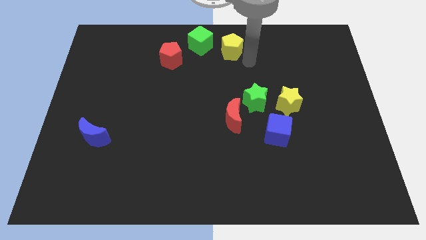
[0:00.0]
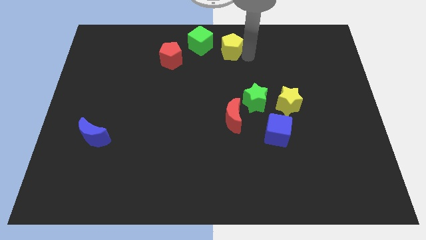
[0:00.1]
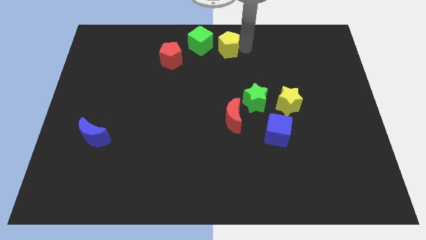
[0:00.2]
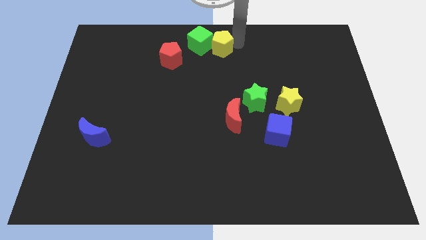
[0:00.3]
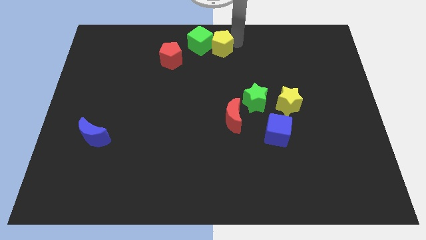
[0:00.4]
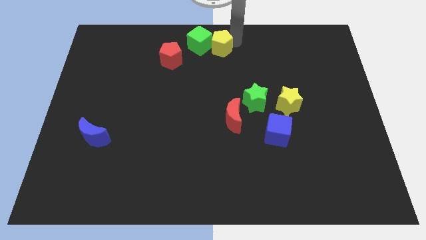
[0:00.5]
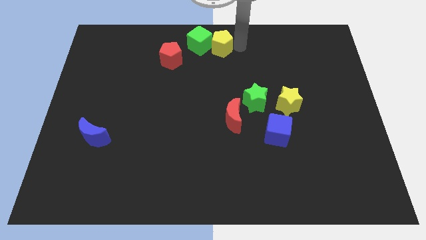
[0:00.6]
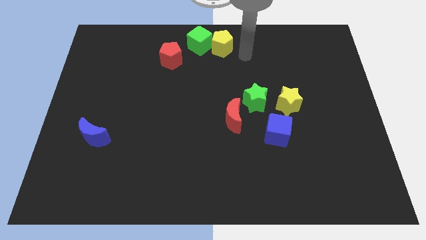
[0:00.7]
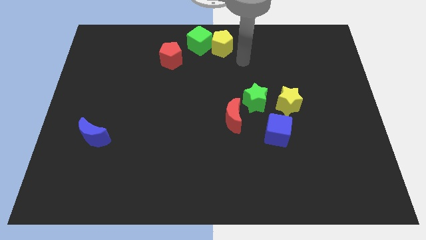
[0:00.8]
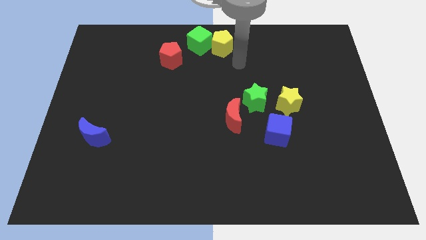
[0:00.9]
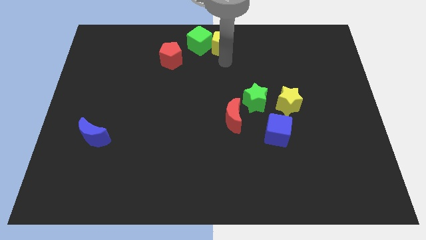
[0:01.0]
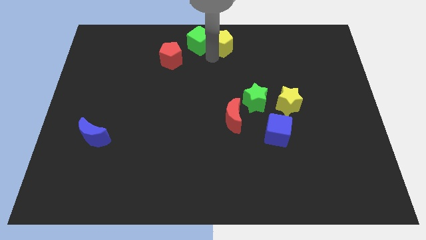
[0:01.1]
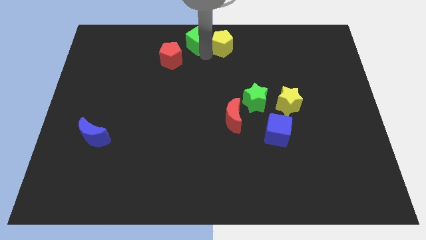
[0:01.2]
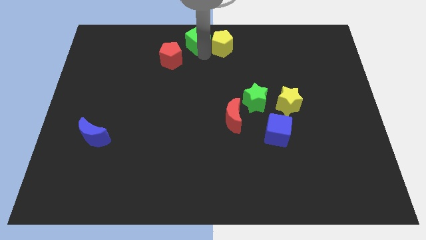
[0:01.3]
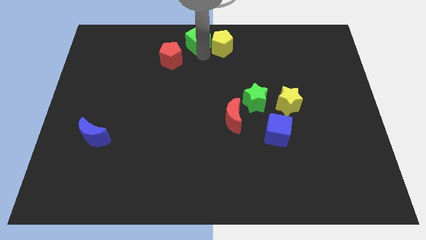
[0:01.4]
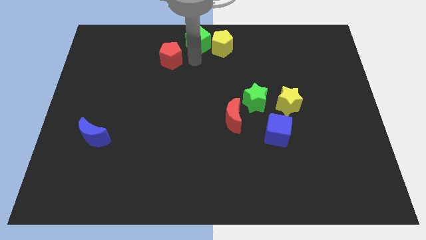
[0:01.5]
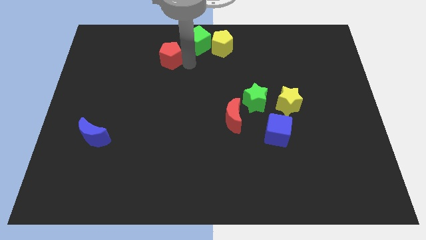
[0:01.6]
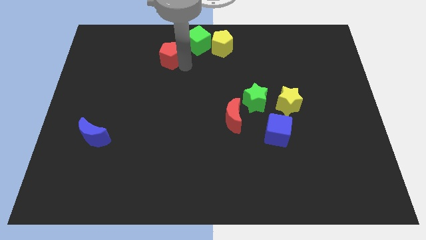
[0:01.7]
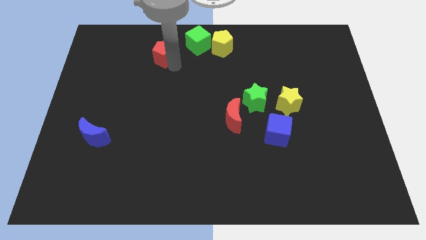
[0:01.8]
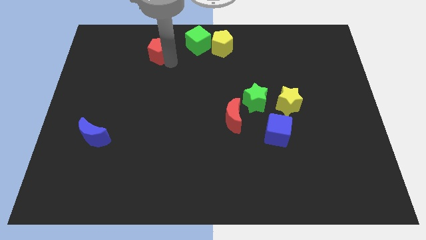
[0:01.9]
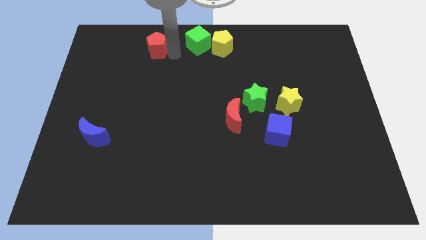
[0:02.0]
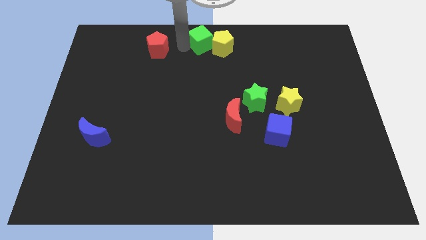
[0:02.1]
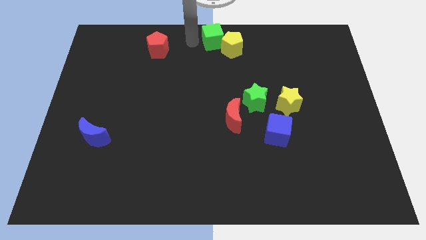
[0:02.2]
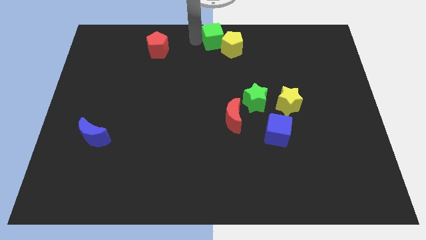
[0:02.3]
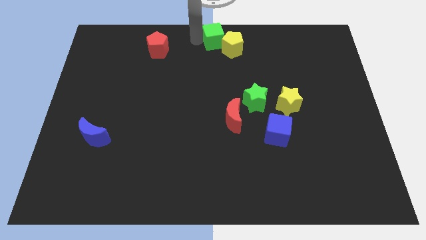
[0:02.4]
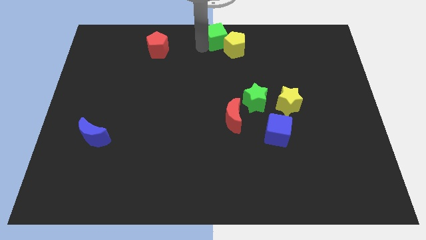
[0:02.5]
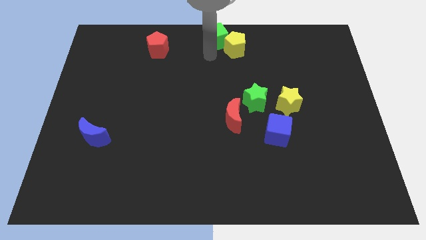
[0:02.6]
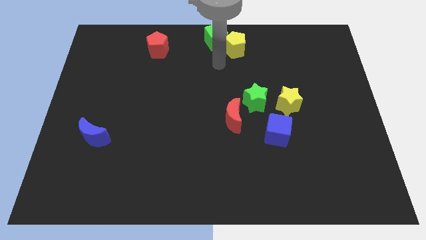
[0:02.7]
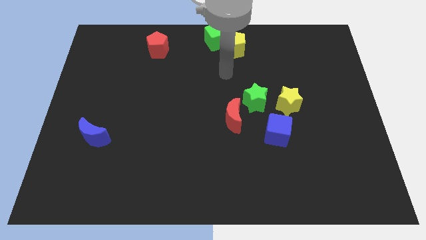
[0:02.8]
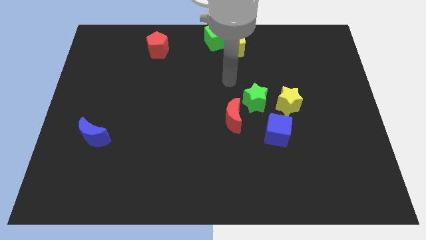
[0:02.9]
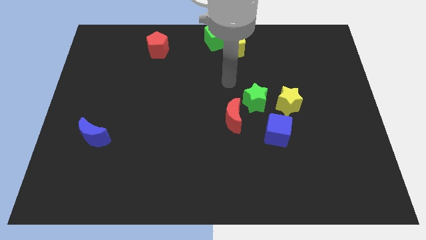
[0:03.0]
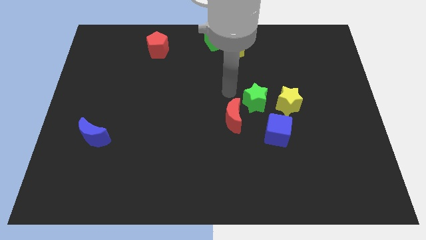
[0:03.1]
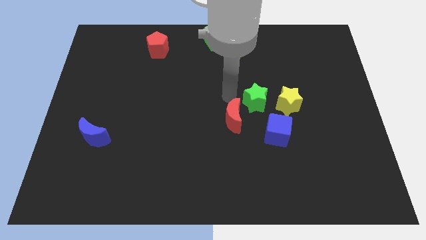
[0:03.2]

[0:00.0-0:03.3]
adjust the yellow pentagon green cube slightly upwards along with the yellow star and green star

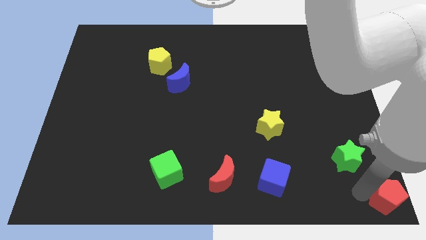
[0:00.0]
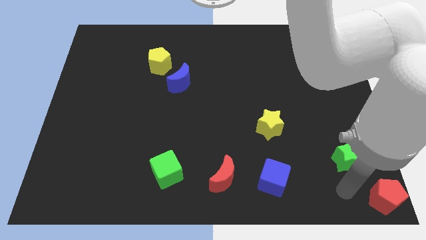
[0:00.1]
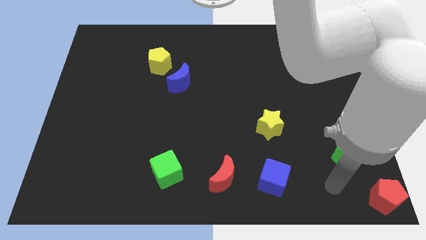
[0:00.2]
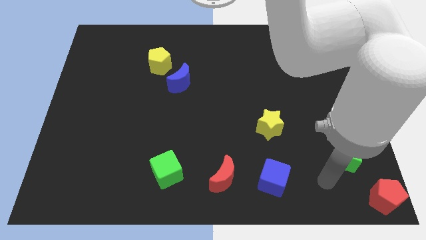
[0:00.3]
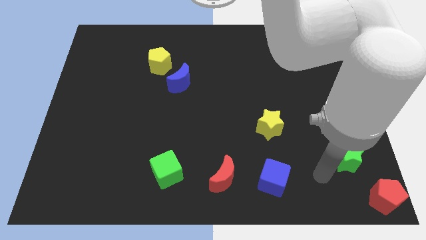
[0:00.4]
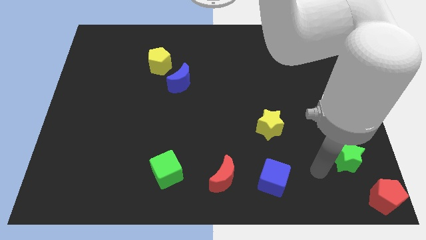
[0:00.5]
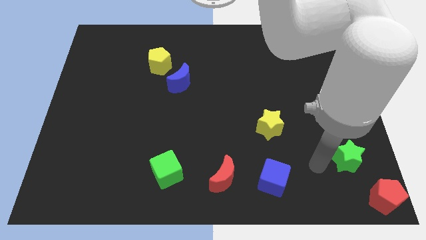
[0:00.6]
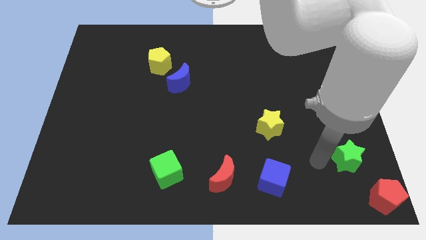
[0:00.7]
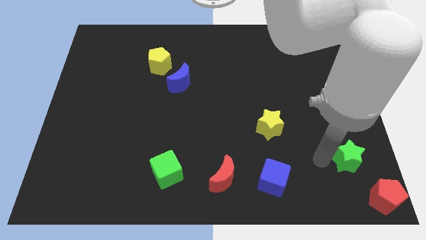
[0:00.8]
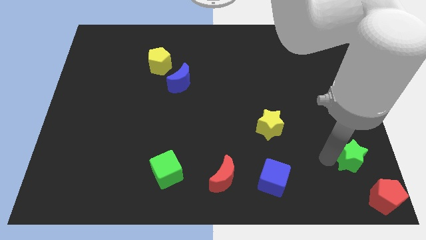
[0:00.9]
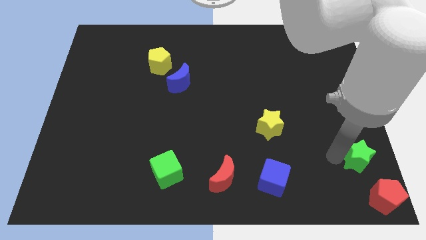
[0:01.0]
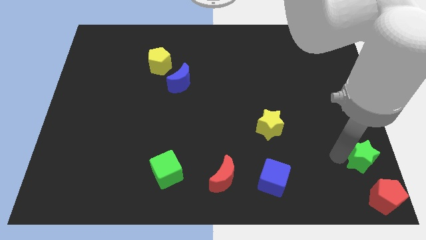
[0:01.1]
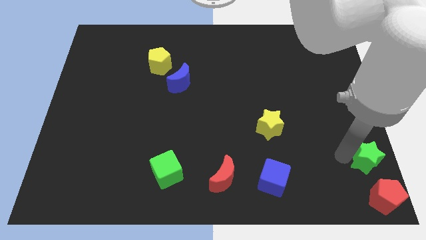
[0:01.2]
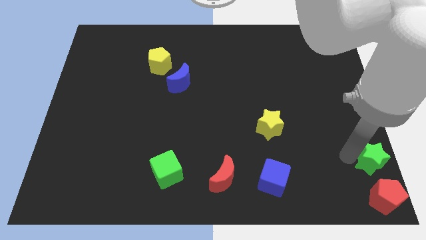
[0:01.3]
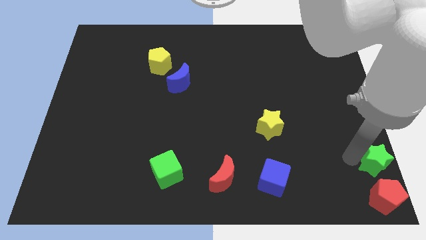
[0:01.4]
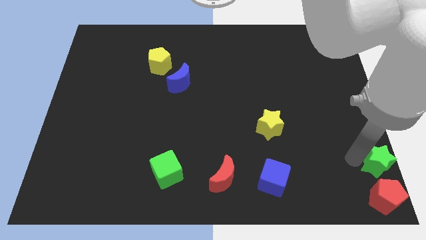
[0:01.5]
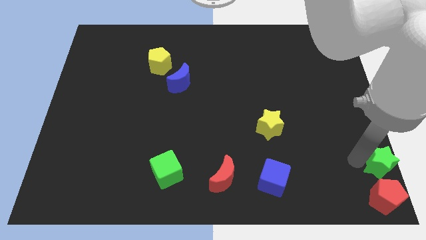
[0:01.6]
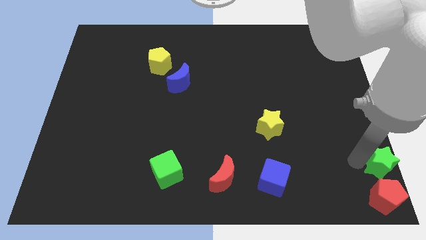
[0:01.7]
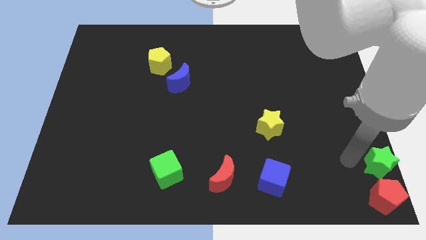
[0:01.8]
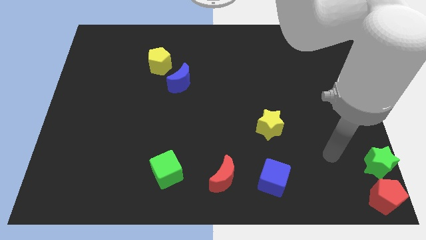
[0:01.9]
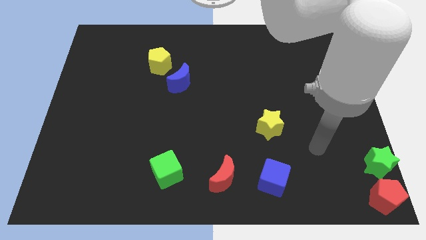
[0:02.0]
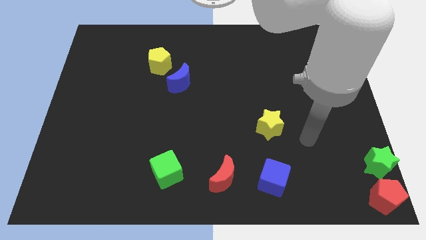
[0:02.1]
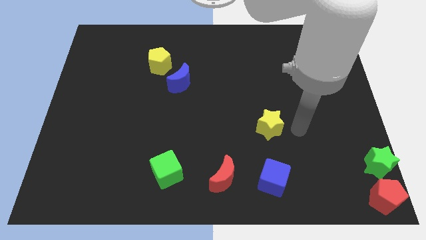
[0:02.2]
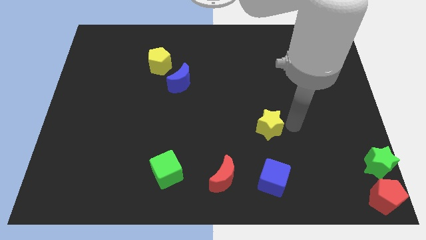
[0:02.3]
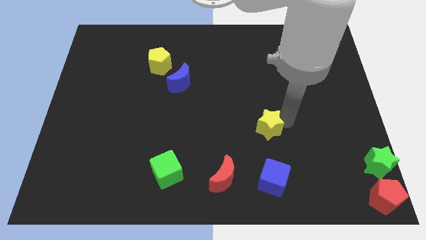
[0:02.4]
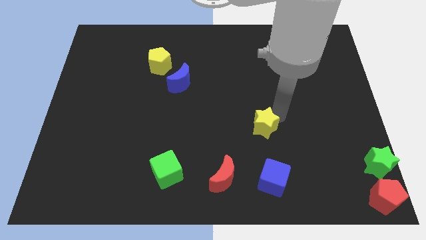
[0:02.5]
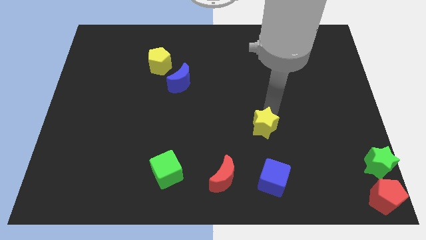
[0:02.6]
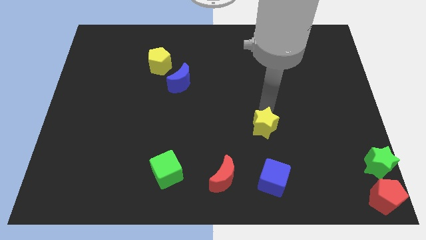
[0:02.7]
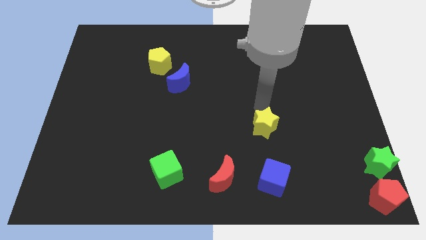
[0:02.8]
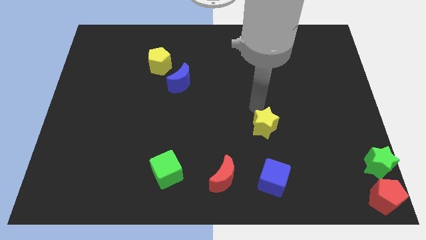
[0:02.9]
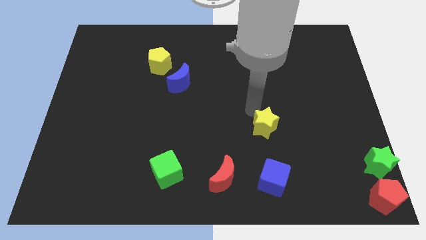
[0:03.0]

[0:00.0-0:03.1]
move green star to the top of red pentagon

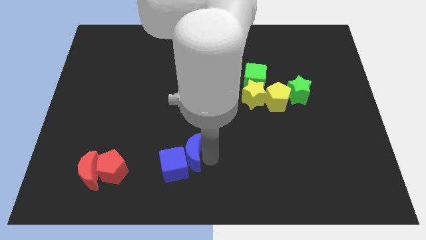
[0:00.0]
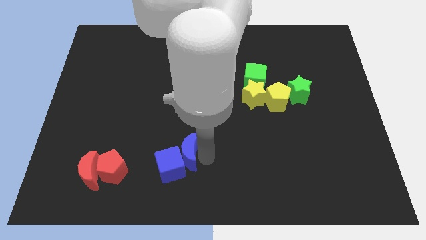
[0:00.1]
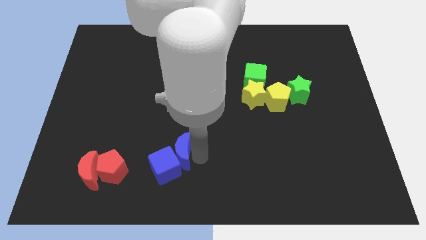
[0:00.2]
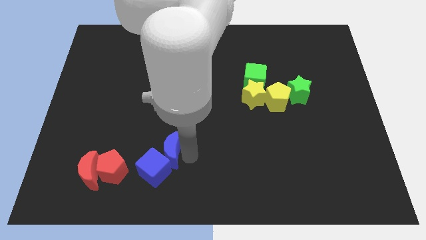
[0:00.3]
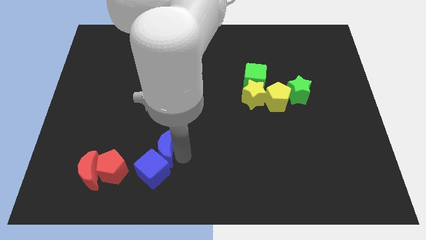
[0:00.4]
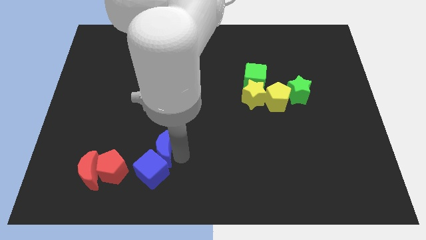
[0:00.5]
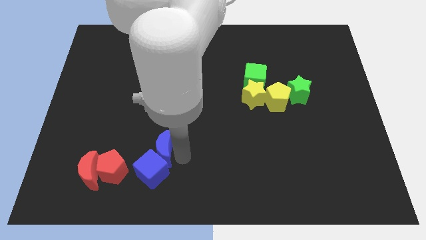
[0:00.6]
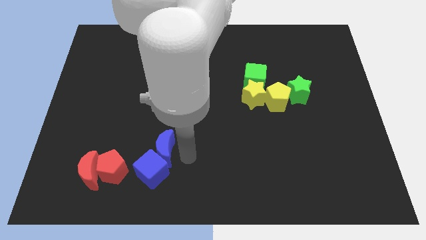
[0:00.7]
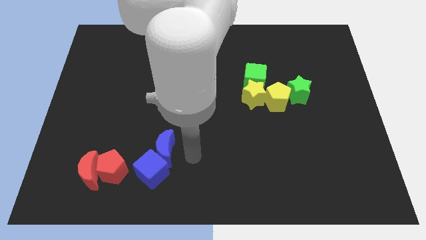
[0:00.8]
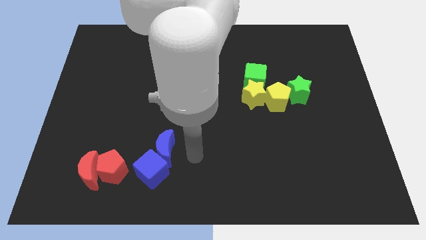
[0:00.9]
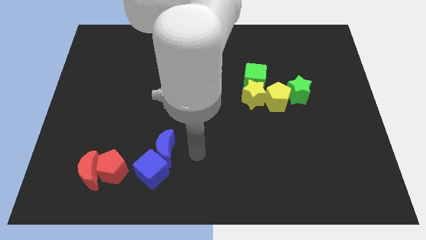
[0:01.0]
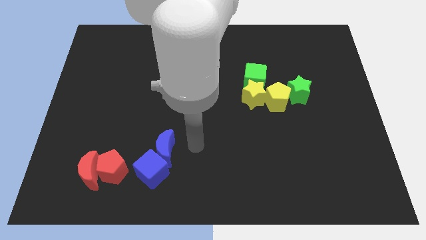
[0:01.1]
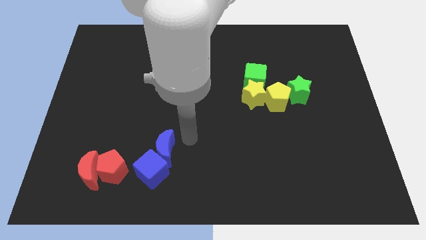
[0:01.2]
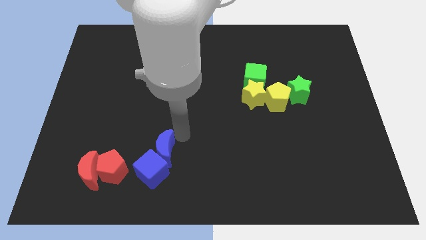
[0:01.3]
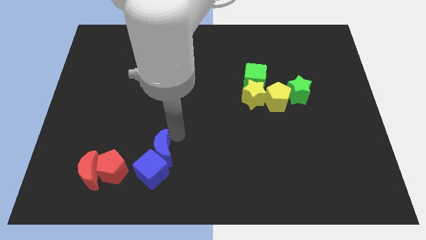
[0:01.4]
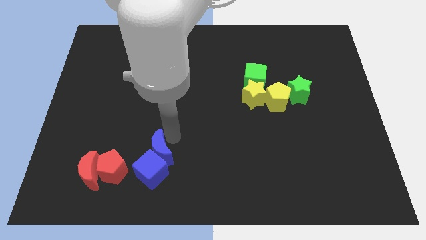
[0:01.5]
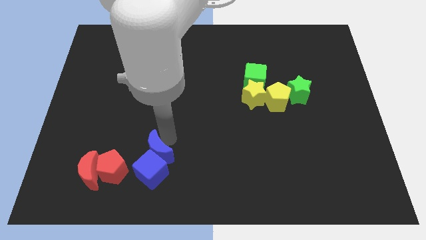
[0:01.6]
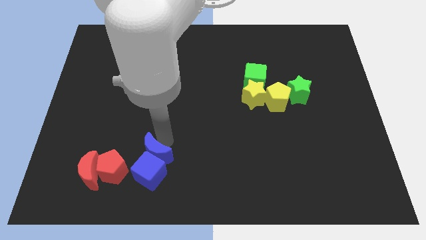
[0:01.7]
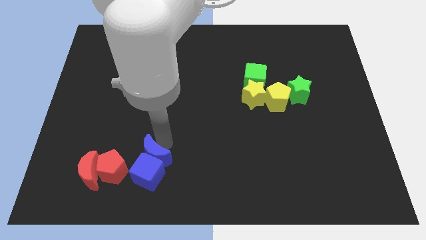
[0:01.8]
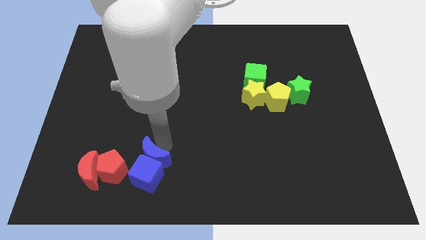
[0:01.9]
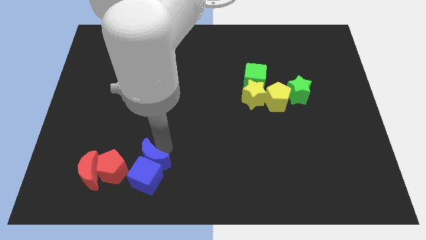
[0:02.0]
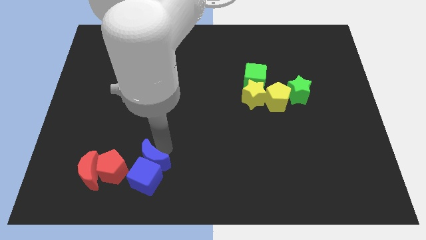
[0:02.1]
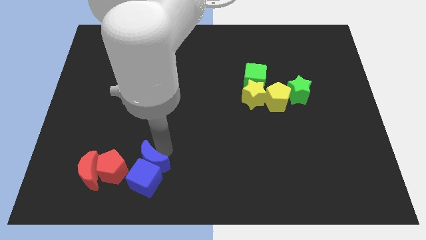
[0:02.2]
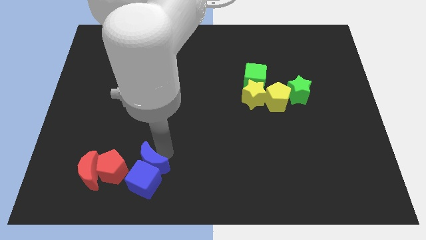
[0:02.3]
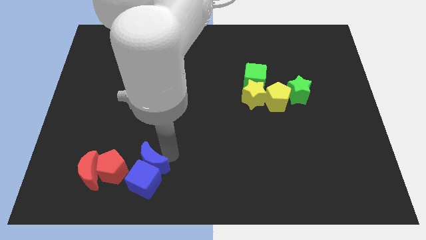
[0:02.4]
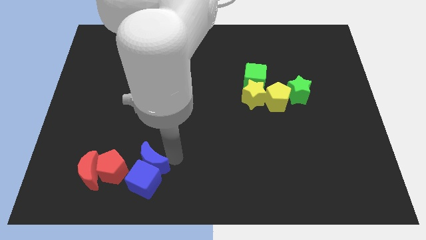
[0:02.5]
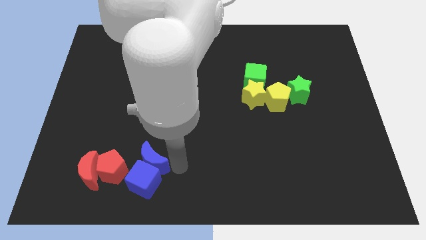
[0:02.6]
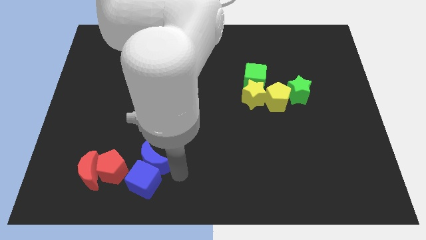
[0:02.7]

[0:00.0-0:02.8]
push the blue blocks toward red blocks
